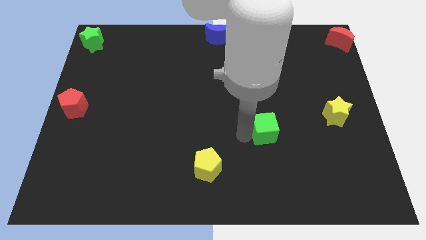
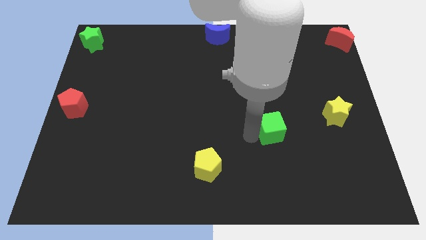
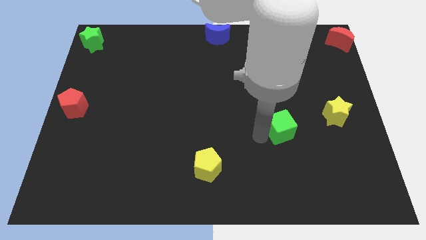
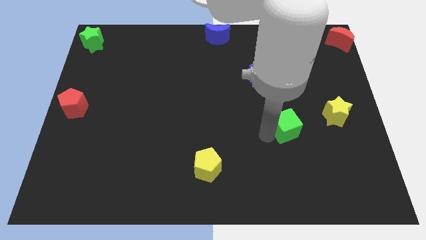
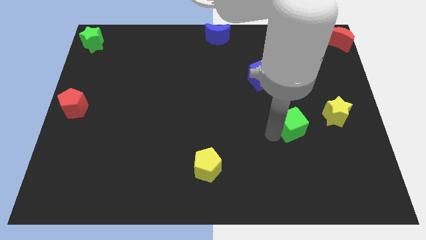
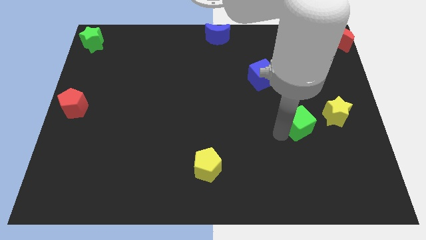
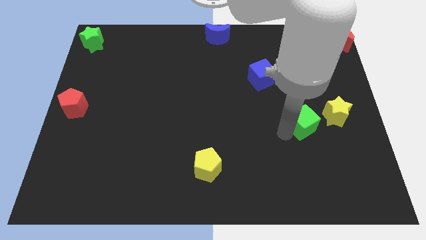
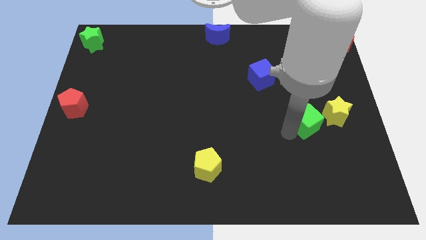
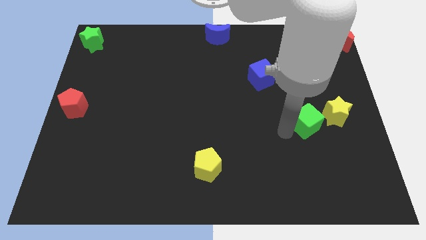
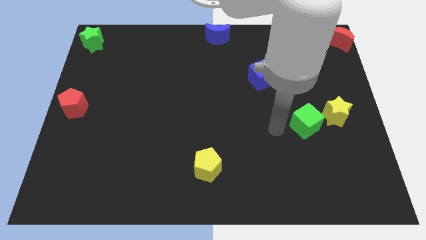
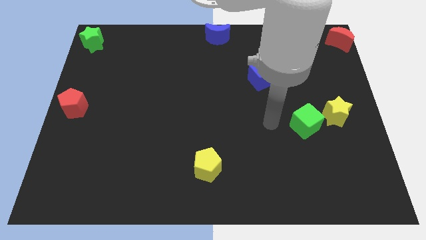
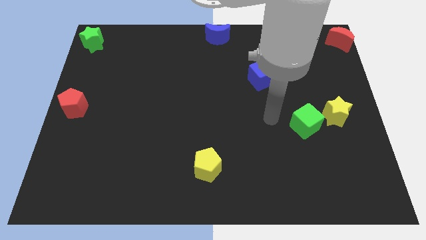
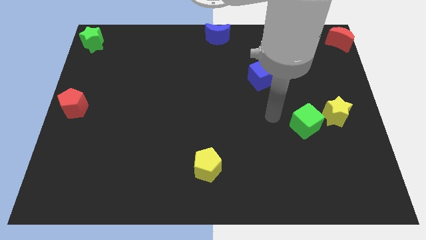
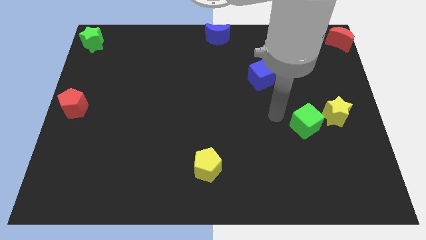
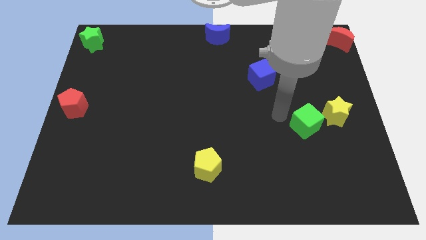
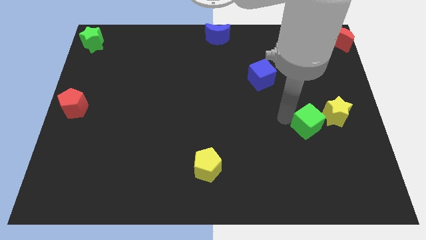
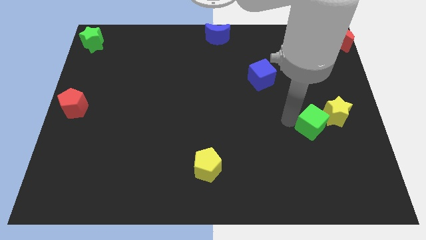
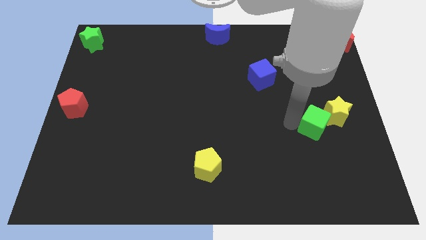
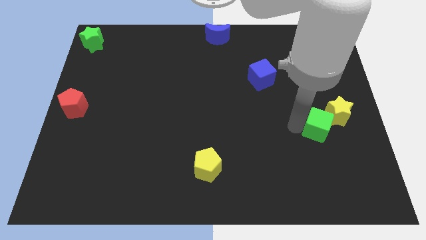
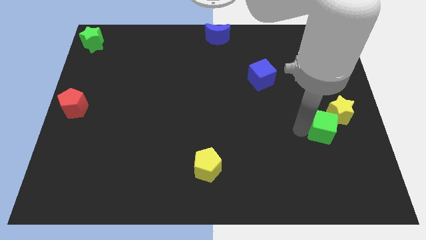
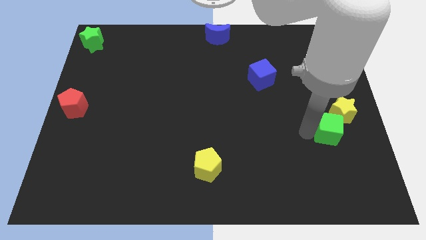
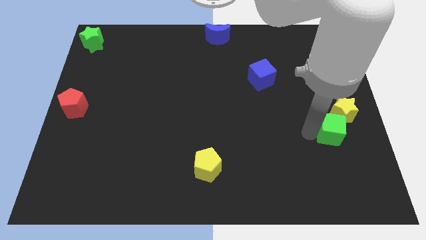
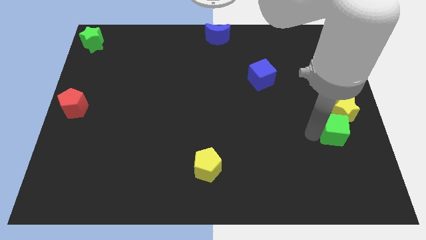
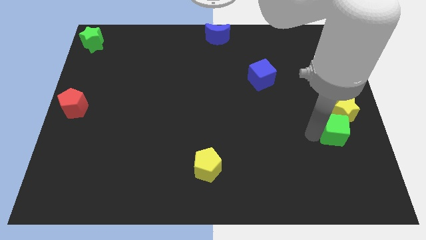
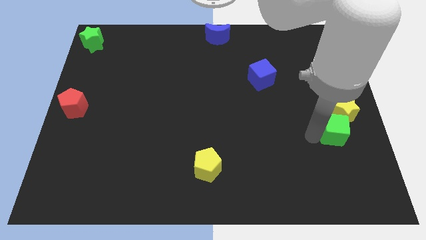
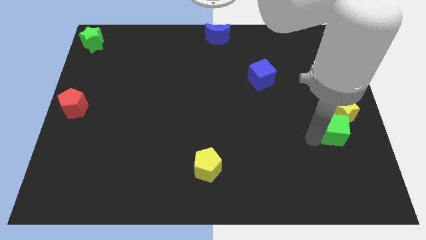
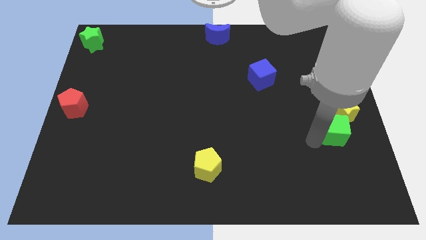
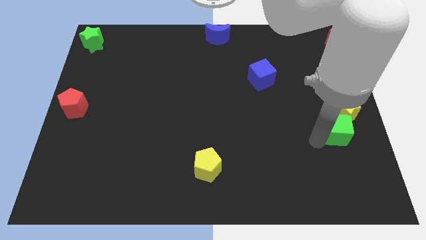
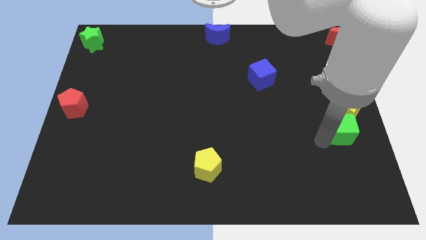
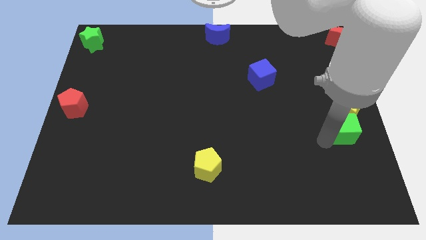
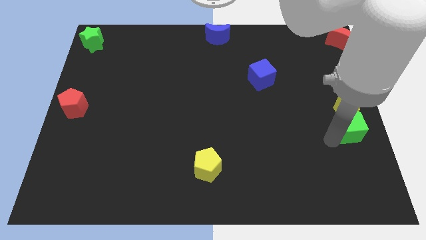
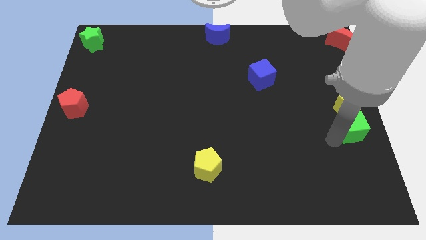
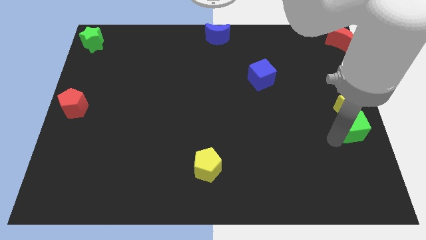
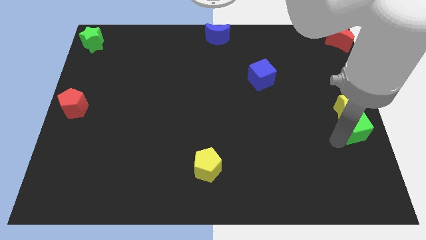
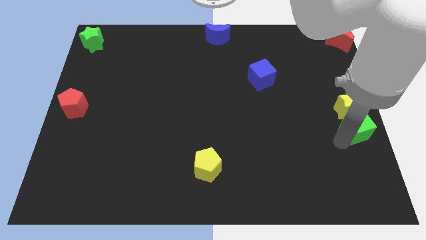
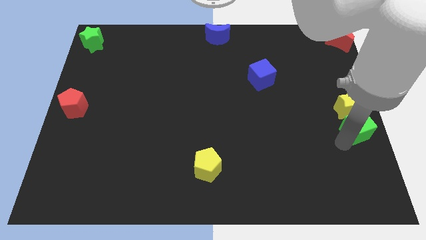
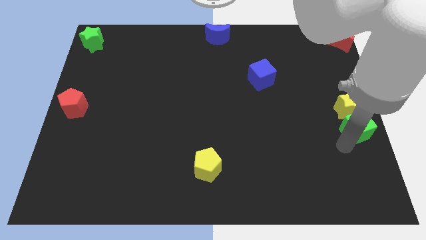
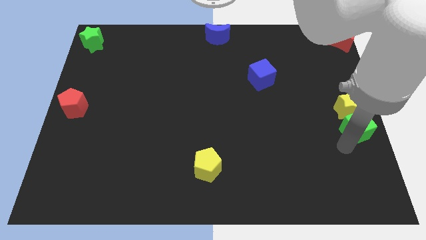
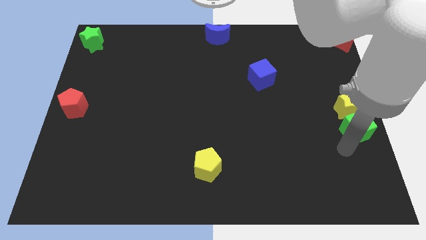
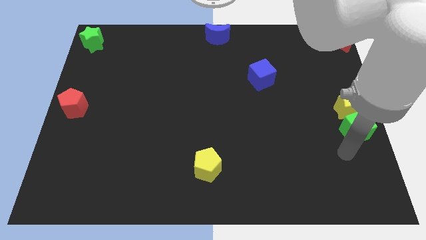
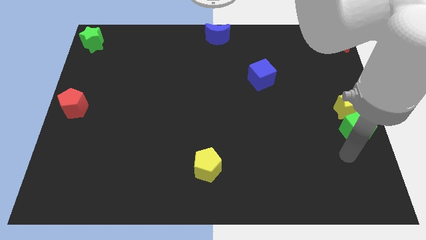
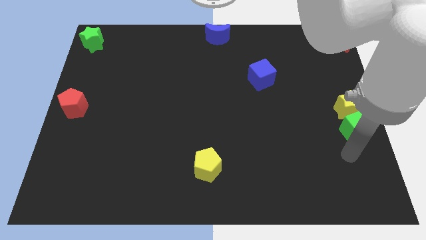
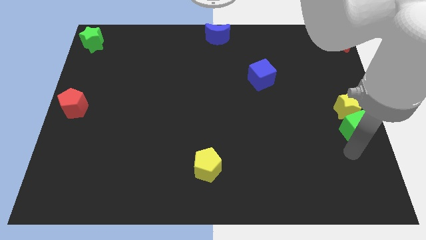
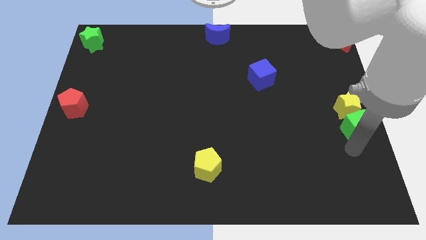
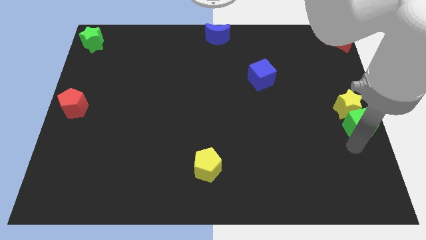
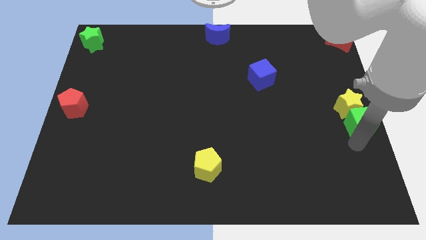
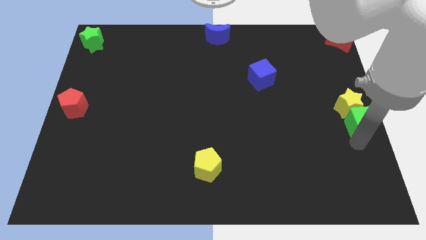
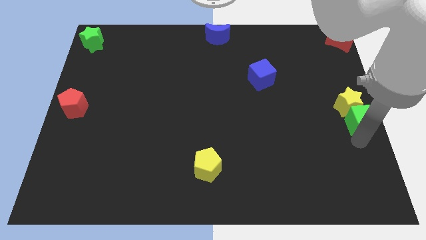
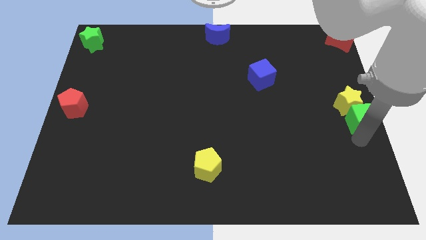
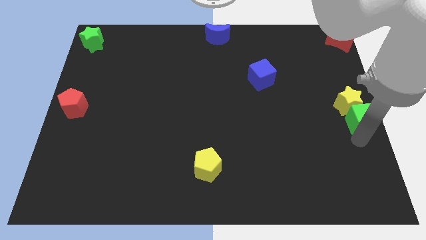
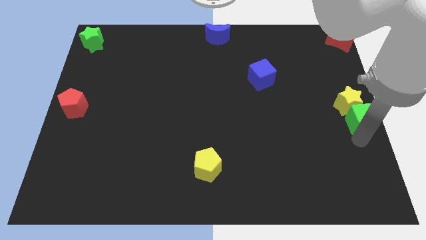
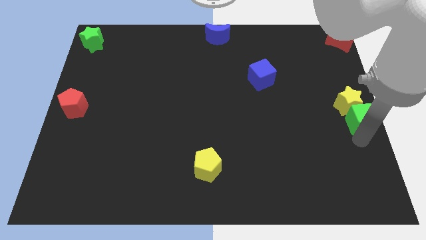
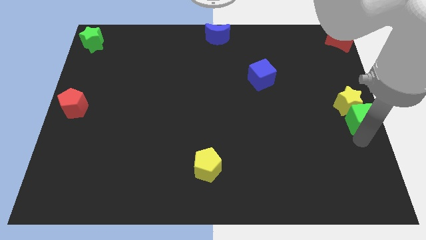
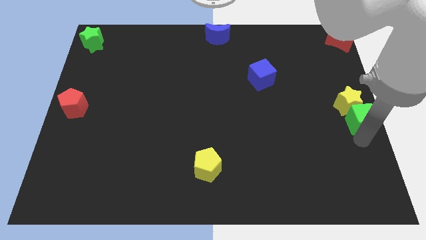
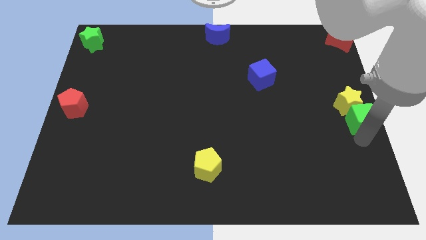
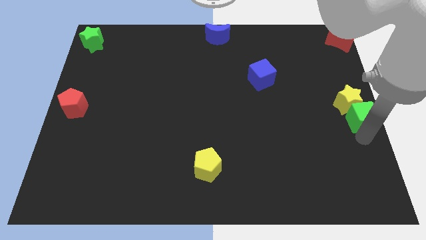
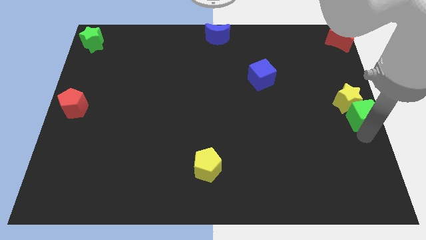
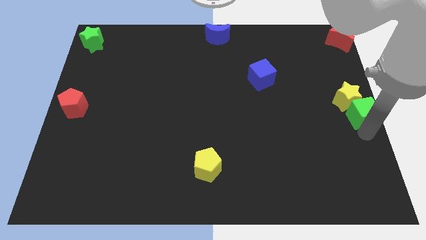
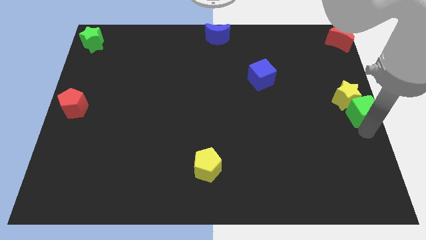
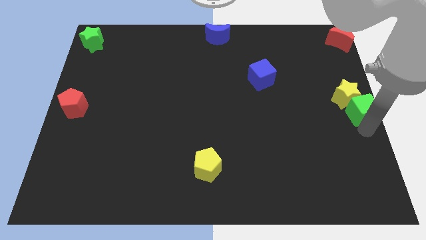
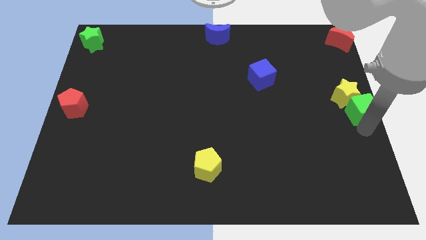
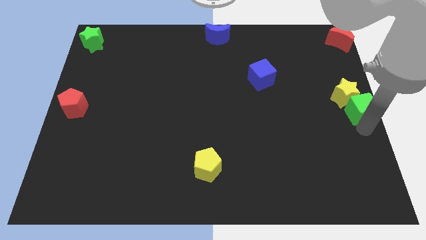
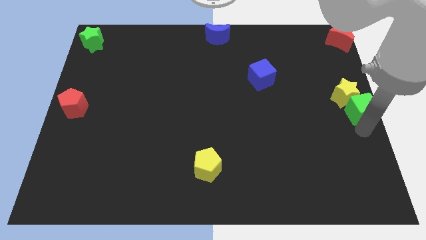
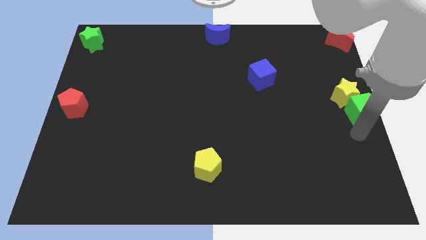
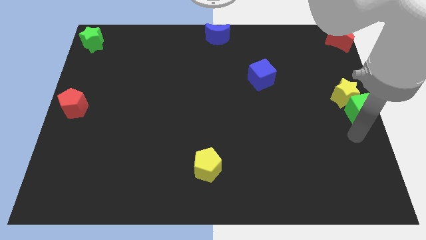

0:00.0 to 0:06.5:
move the green cube to the center right of the board

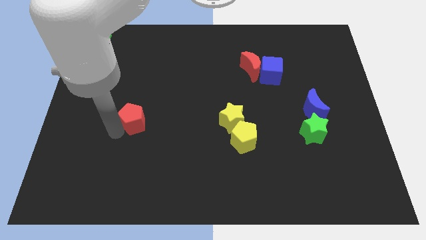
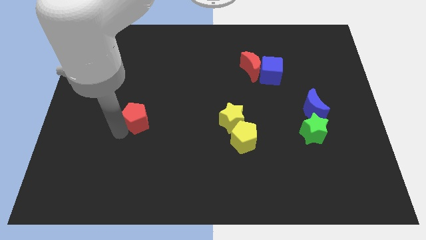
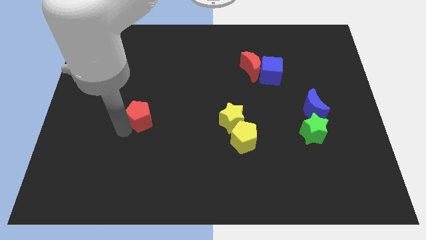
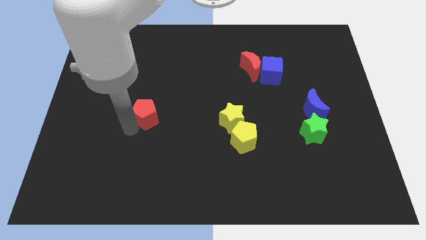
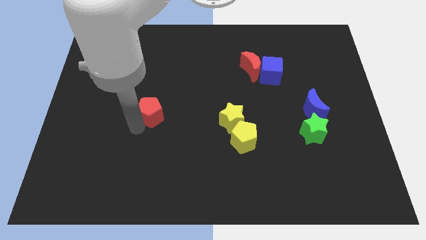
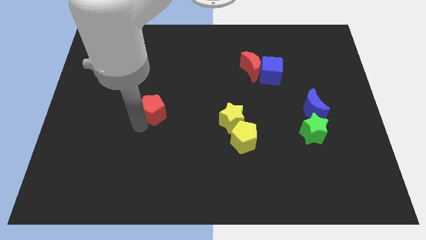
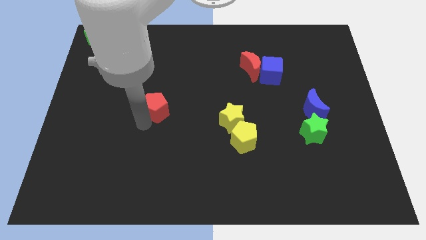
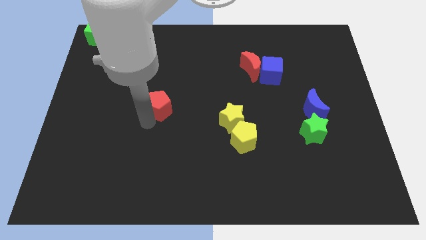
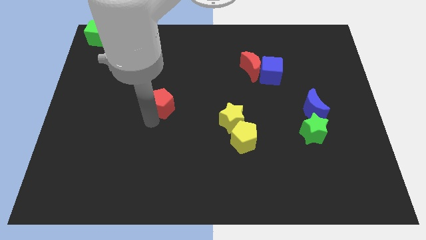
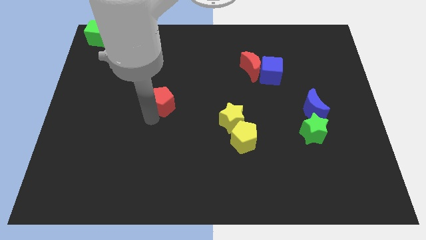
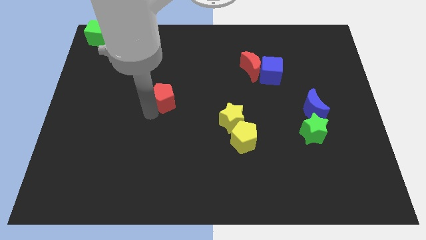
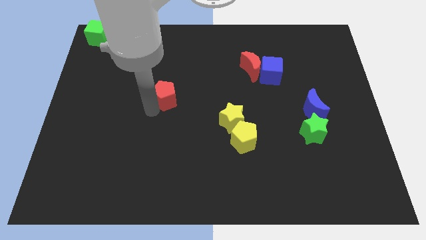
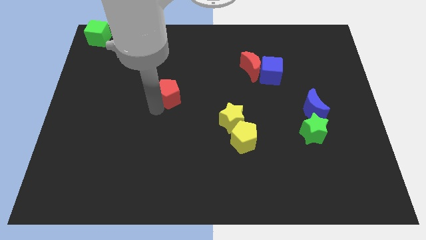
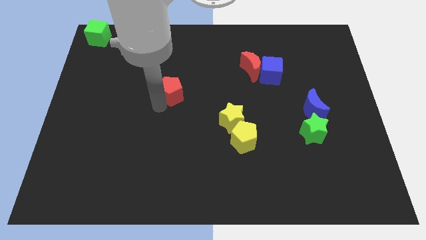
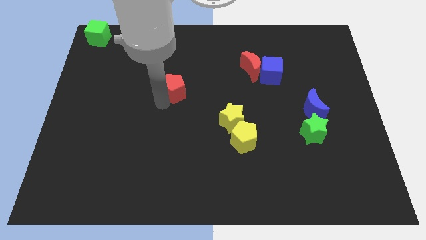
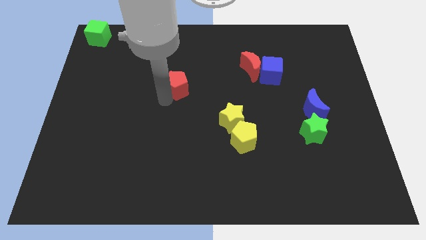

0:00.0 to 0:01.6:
move red pentagon diagonally in between yellow star and green cube

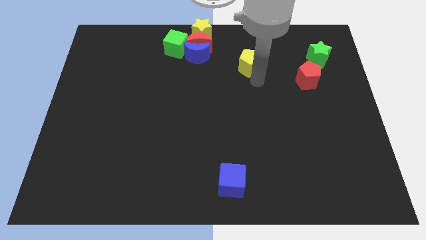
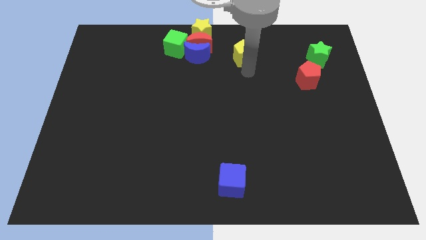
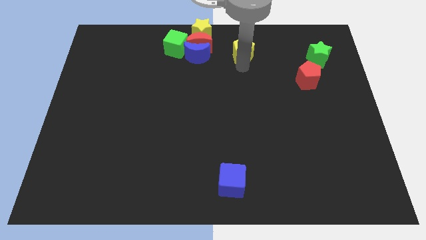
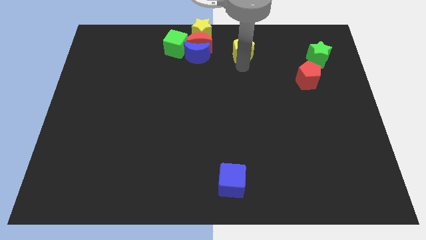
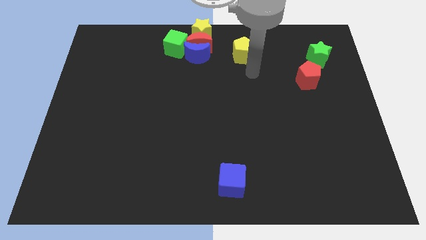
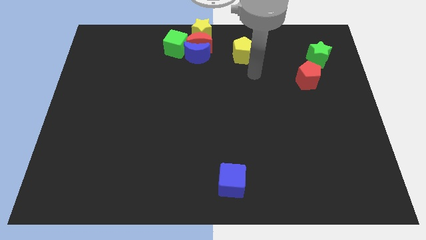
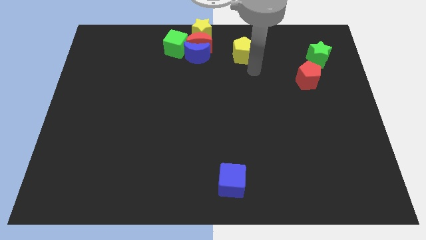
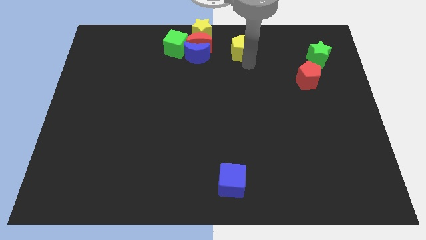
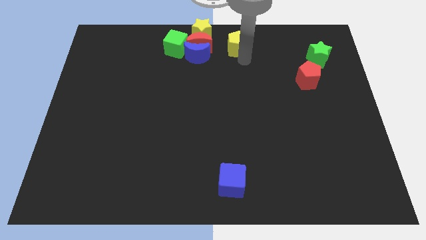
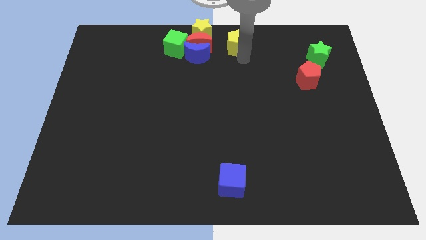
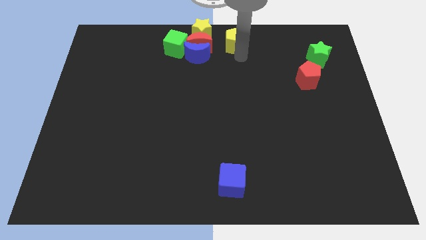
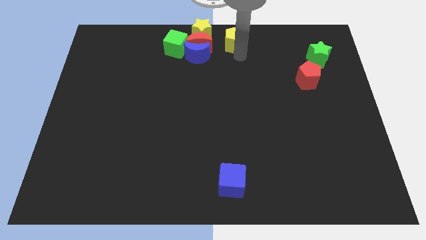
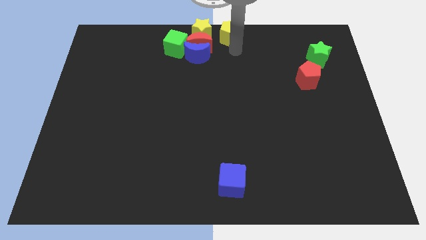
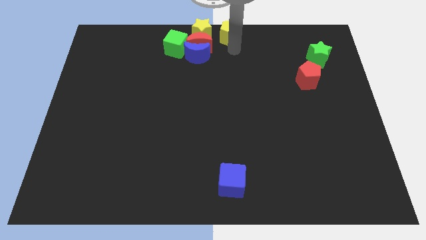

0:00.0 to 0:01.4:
place the yellow pentagon right to the yellow star
